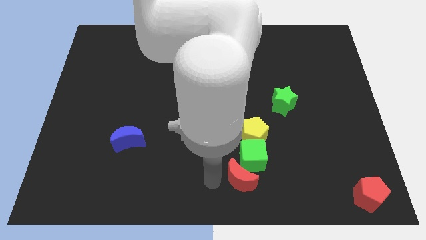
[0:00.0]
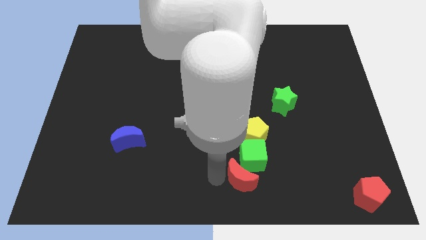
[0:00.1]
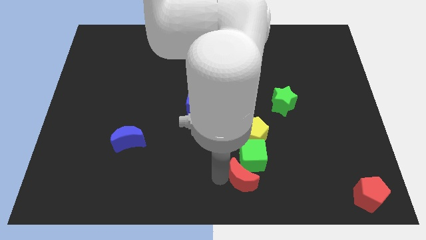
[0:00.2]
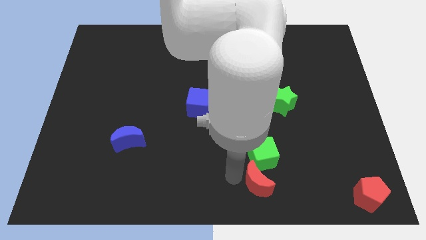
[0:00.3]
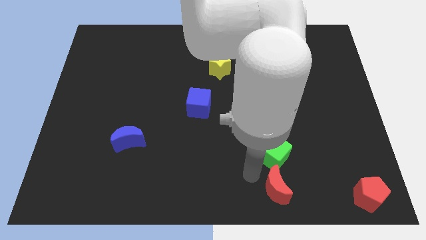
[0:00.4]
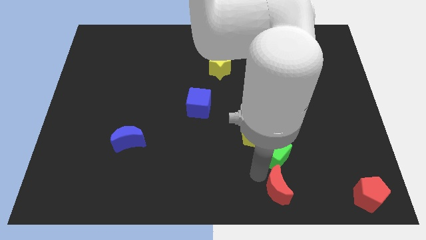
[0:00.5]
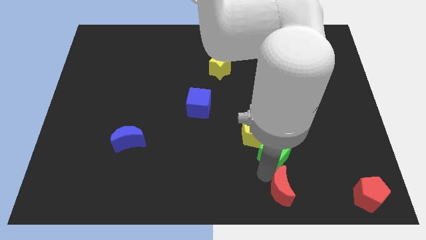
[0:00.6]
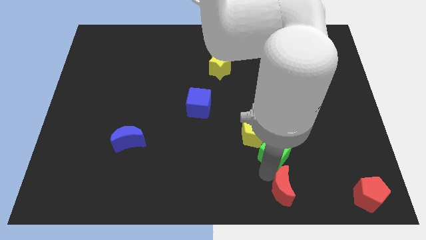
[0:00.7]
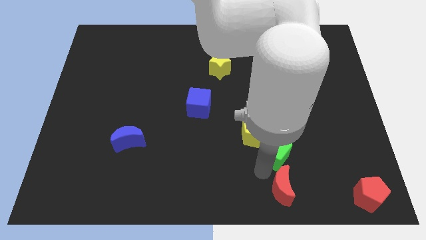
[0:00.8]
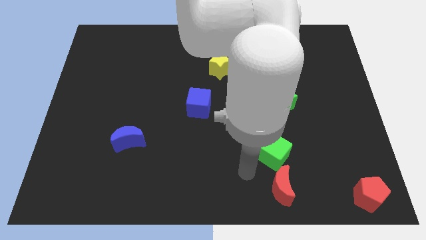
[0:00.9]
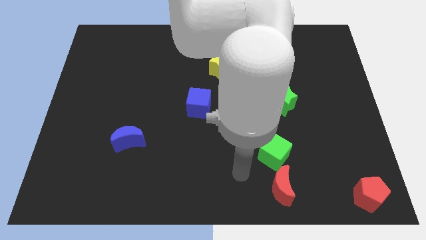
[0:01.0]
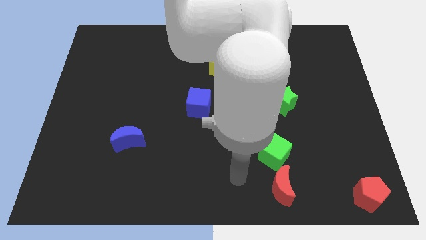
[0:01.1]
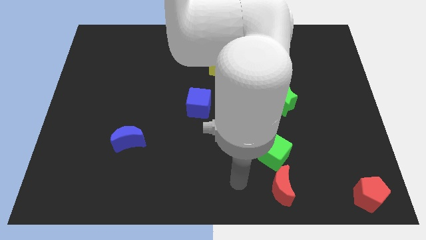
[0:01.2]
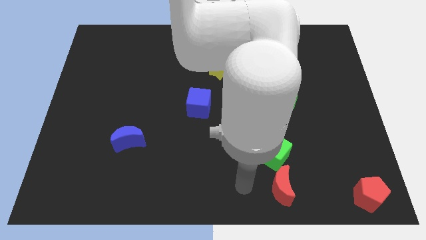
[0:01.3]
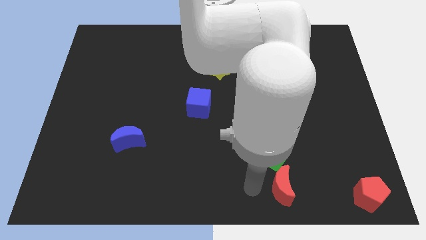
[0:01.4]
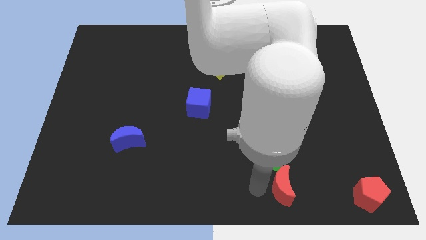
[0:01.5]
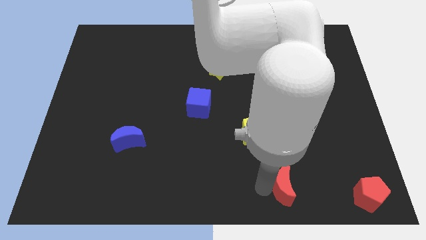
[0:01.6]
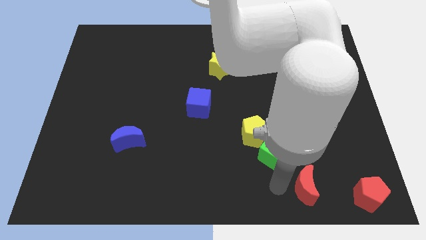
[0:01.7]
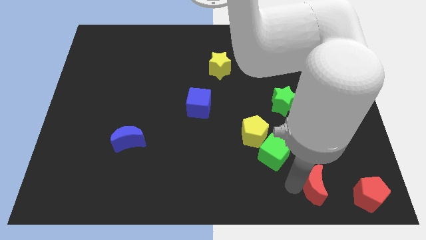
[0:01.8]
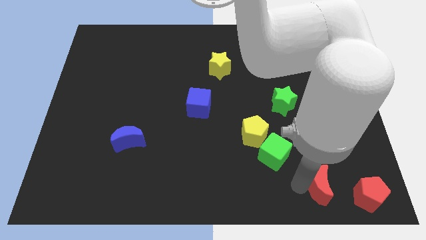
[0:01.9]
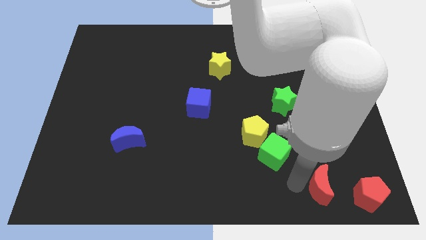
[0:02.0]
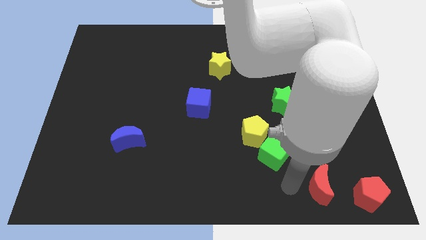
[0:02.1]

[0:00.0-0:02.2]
separate red moon from green cube

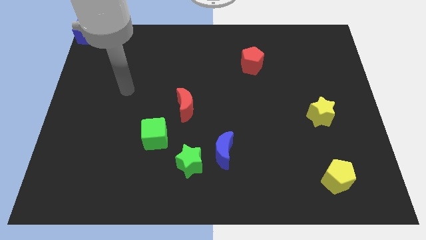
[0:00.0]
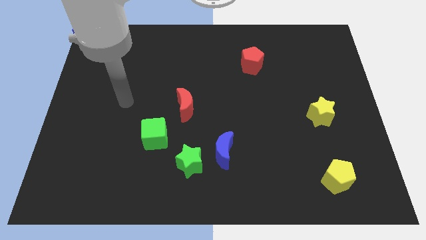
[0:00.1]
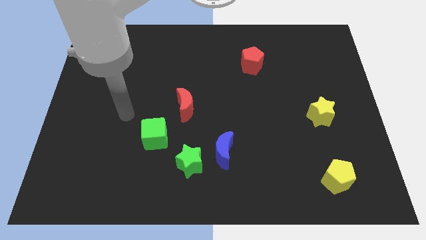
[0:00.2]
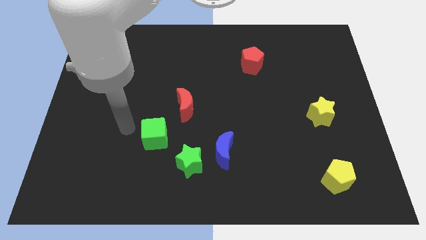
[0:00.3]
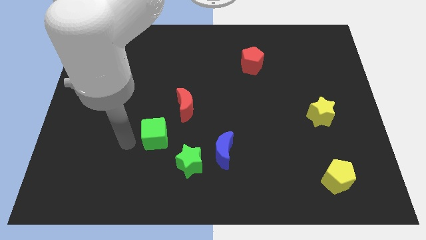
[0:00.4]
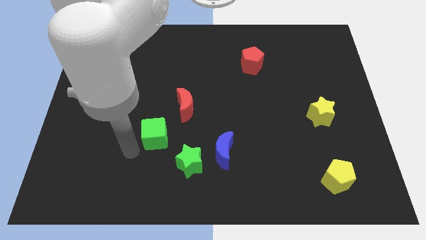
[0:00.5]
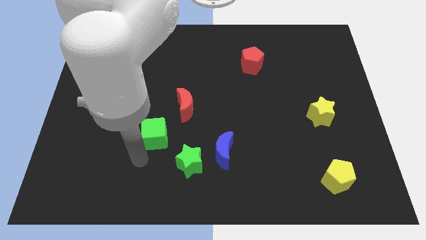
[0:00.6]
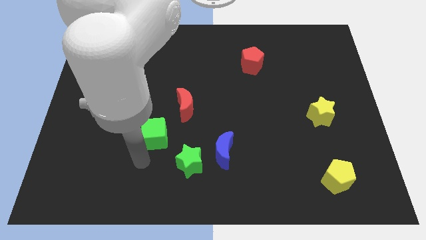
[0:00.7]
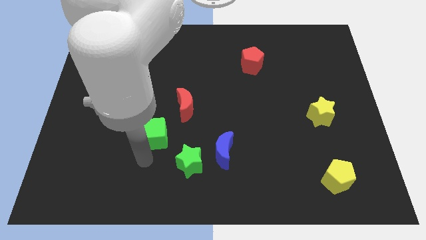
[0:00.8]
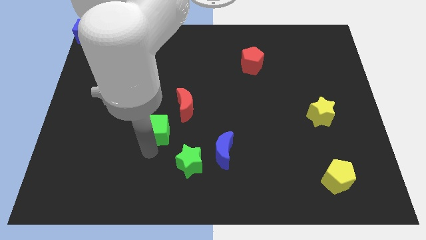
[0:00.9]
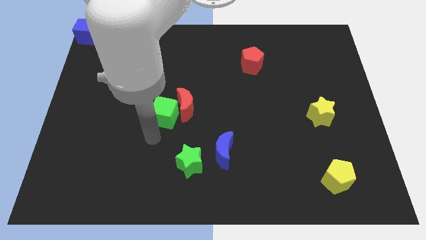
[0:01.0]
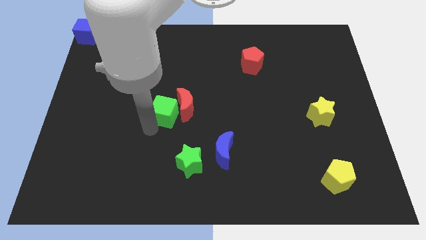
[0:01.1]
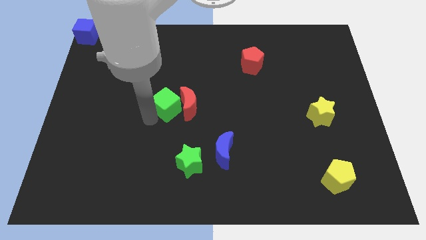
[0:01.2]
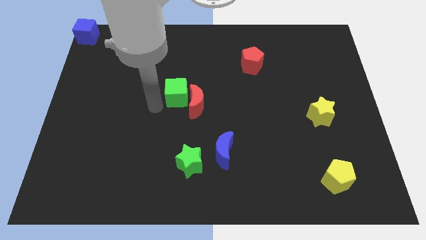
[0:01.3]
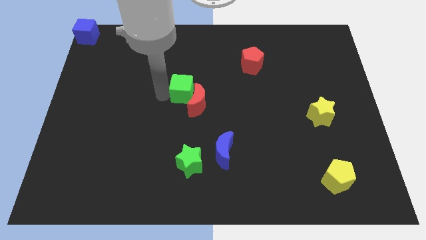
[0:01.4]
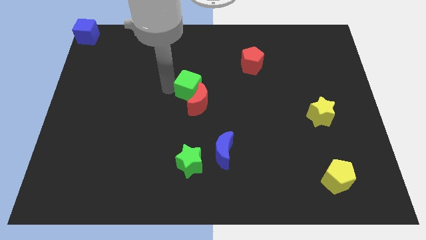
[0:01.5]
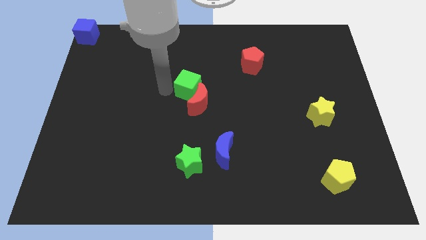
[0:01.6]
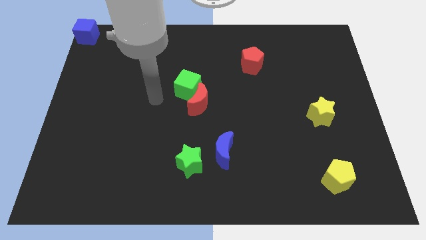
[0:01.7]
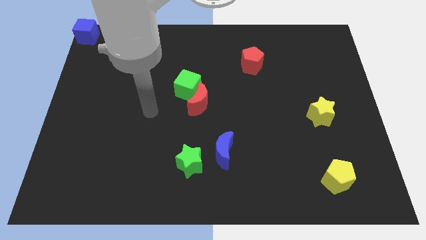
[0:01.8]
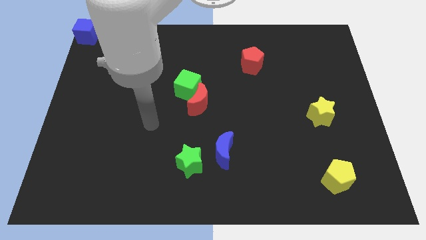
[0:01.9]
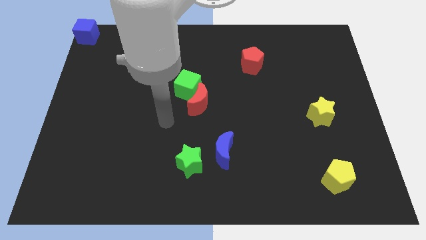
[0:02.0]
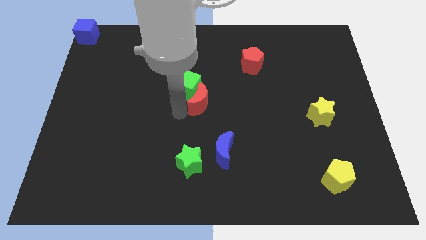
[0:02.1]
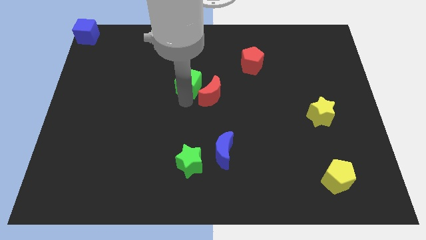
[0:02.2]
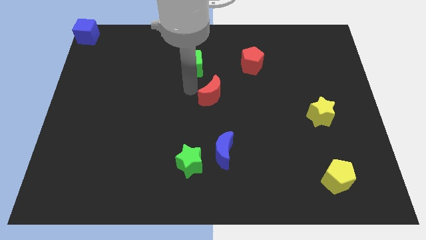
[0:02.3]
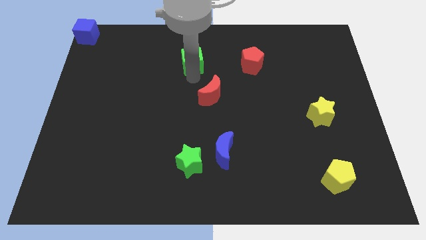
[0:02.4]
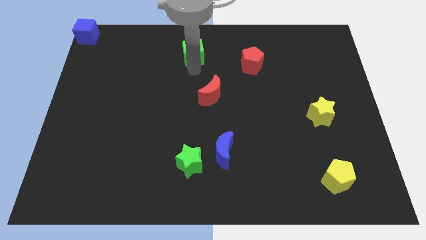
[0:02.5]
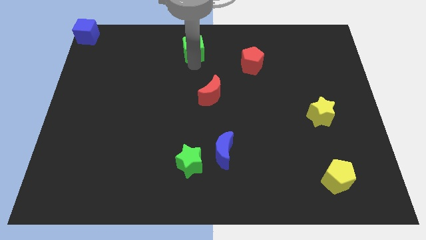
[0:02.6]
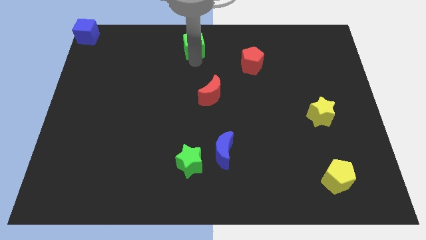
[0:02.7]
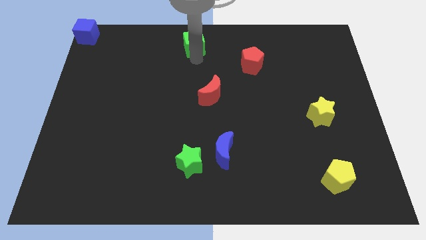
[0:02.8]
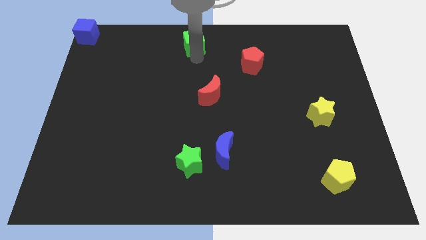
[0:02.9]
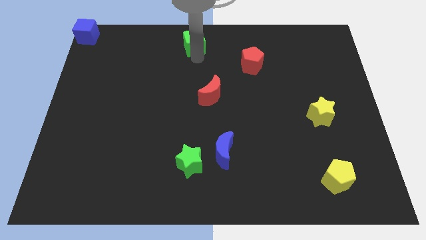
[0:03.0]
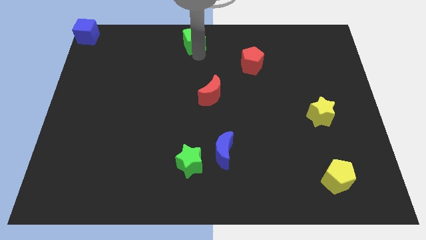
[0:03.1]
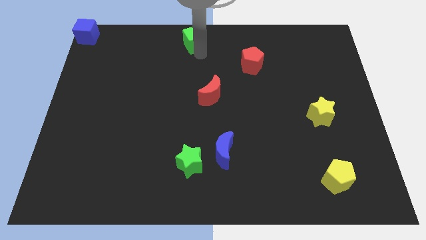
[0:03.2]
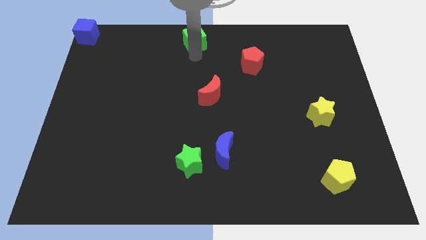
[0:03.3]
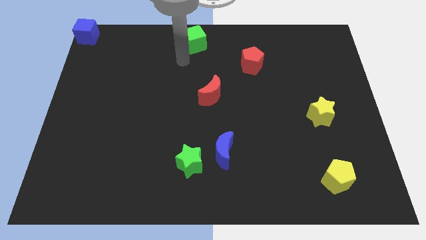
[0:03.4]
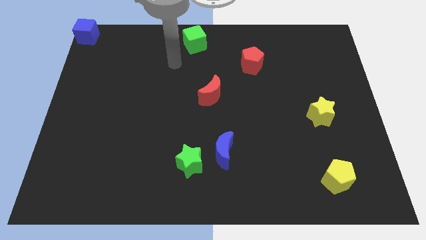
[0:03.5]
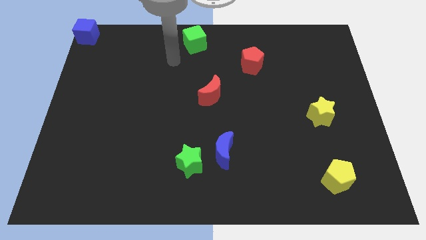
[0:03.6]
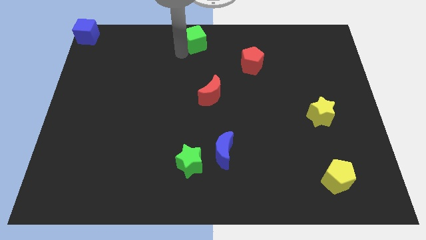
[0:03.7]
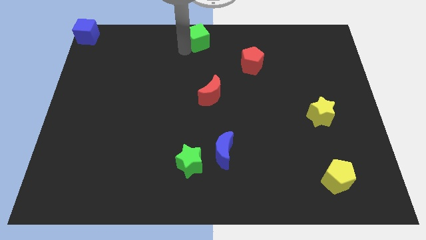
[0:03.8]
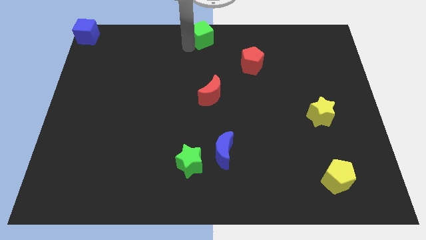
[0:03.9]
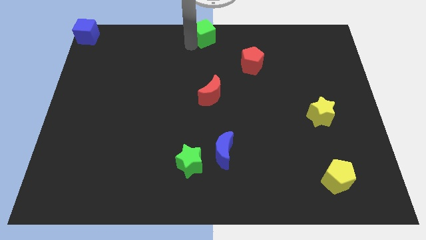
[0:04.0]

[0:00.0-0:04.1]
push green cube to the top center

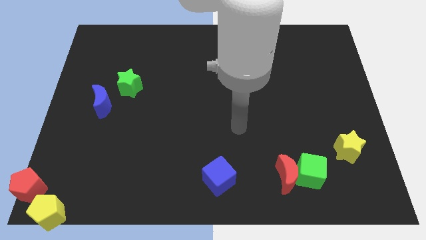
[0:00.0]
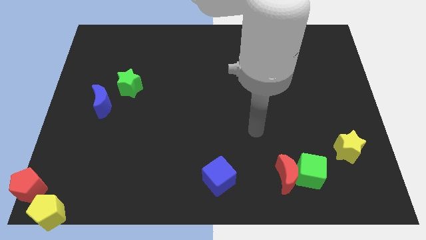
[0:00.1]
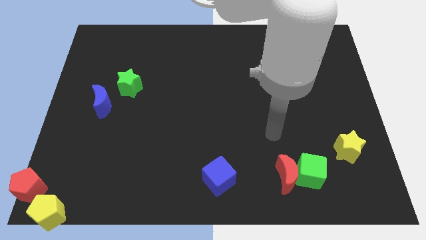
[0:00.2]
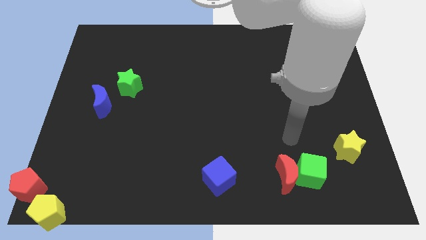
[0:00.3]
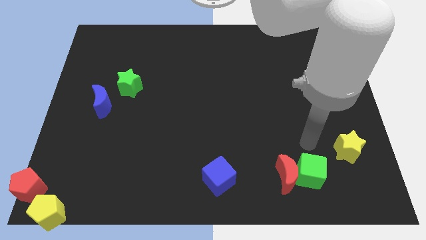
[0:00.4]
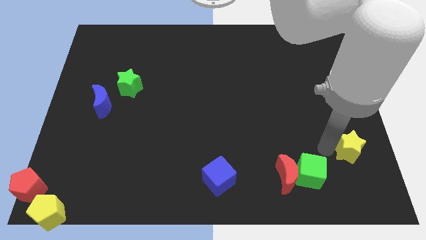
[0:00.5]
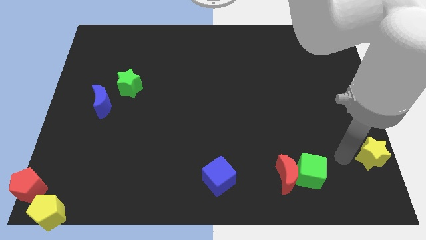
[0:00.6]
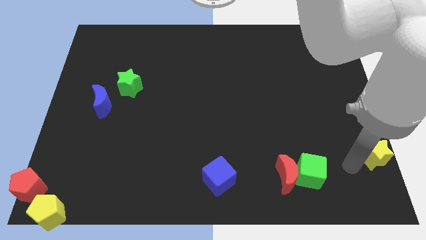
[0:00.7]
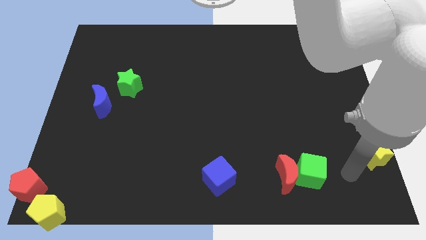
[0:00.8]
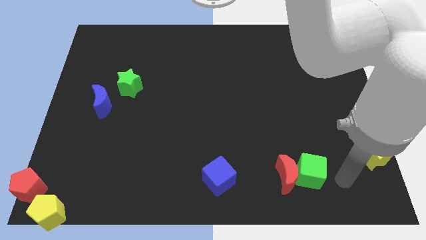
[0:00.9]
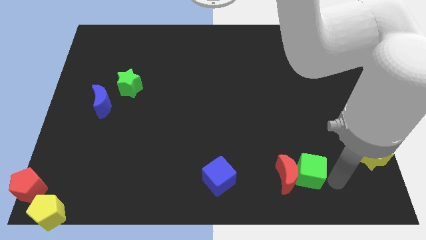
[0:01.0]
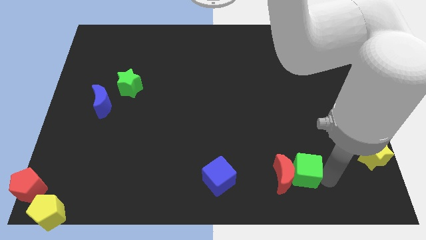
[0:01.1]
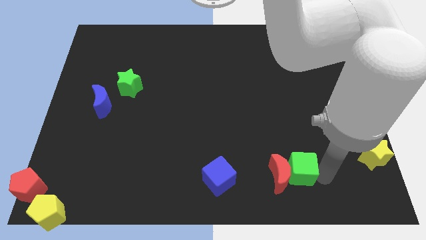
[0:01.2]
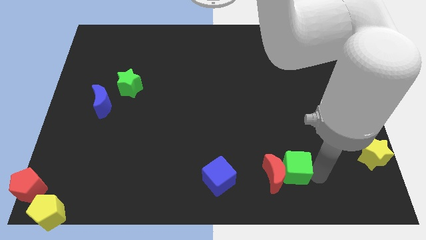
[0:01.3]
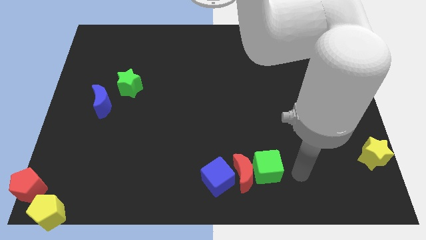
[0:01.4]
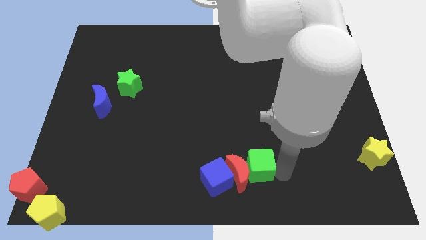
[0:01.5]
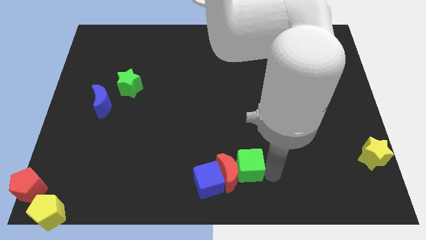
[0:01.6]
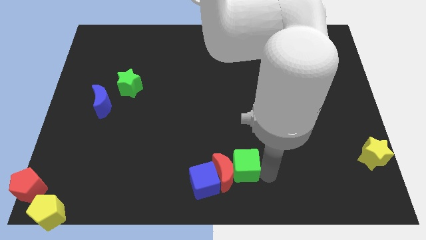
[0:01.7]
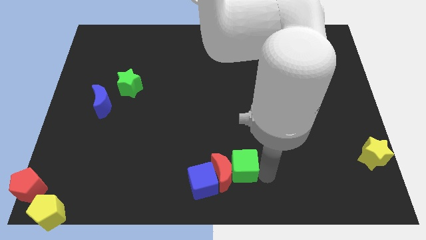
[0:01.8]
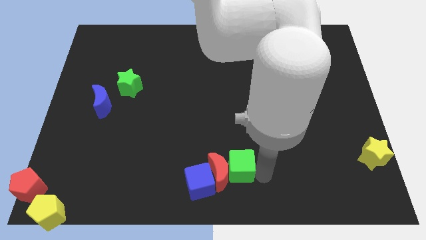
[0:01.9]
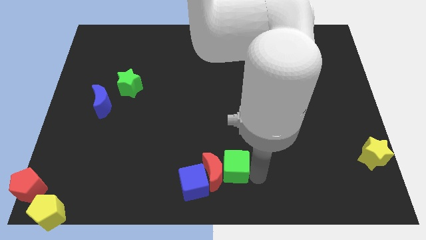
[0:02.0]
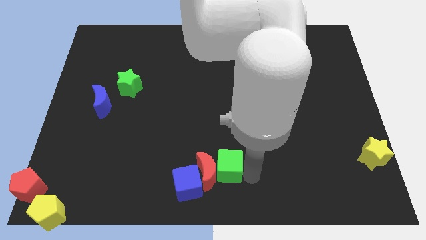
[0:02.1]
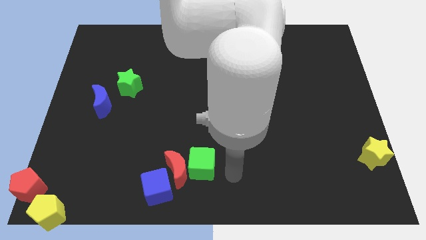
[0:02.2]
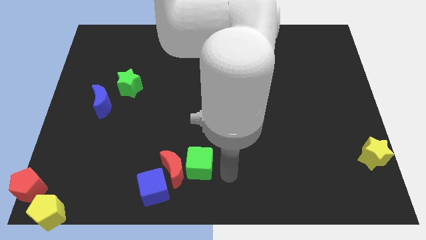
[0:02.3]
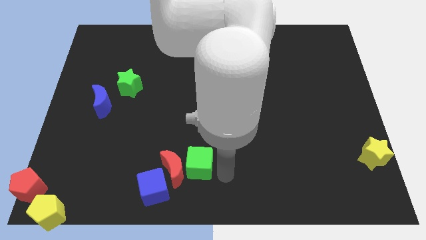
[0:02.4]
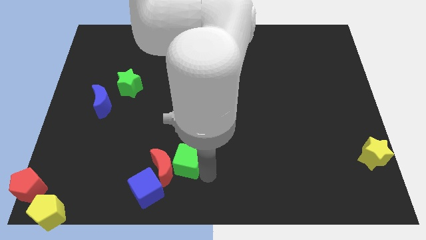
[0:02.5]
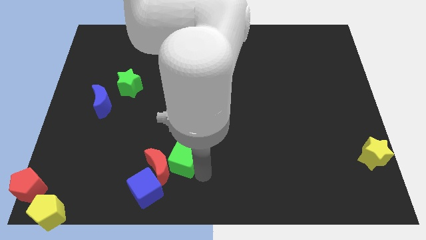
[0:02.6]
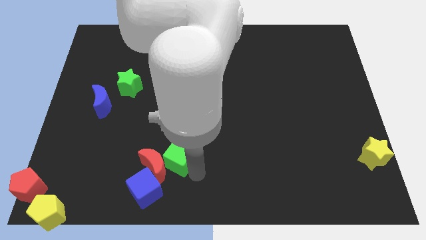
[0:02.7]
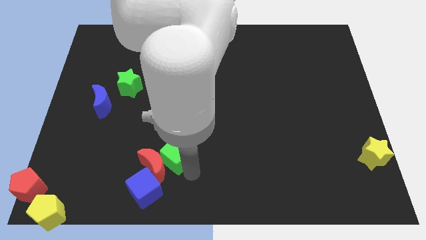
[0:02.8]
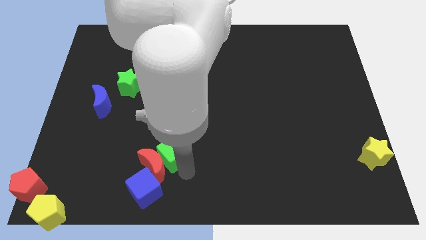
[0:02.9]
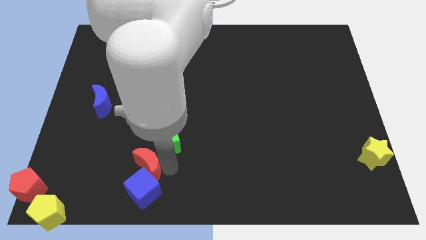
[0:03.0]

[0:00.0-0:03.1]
move green cube red moon and blue cube towards yellow pentagon
